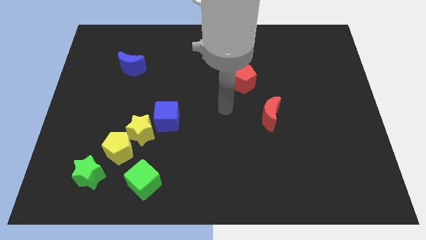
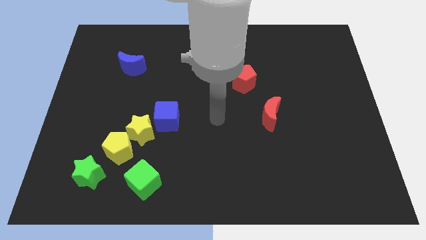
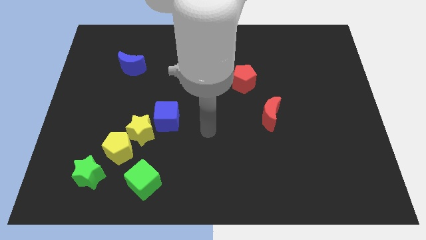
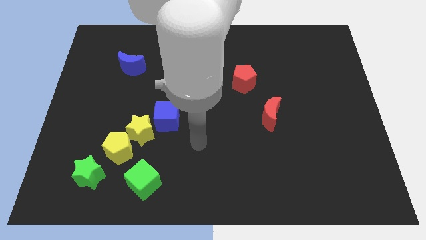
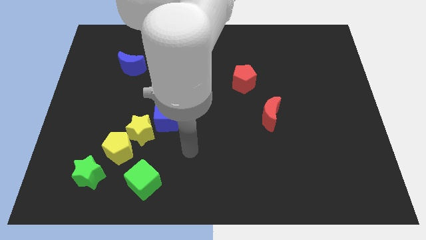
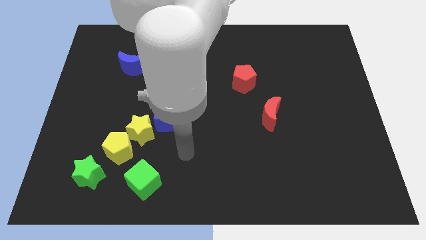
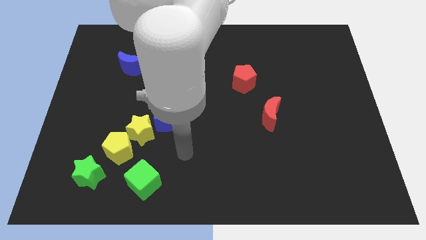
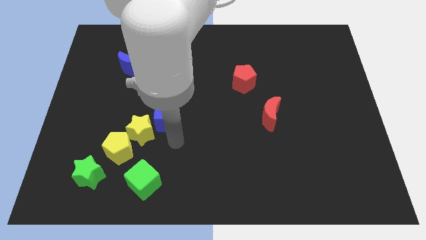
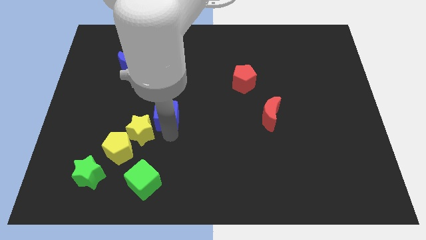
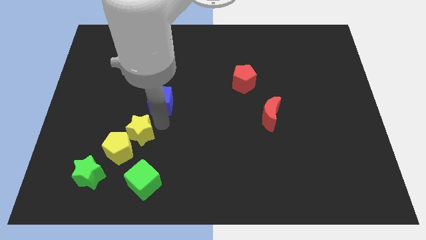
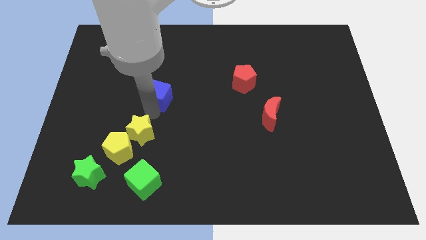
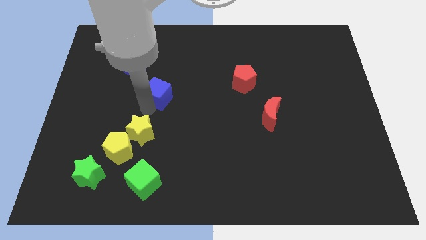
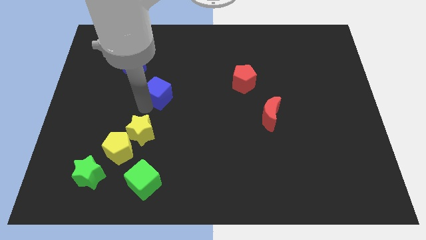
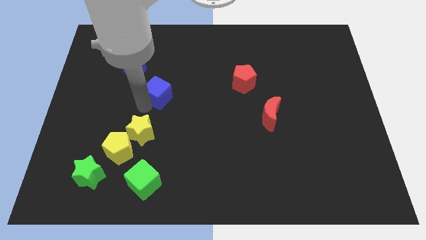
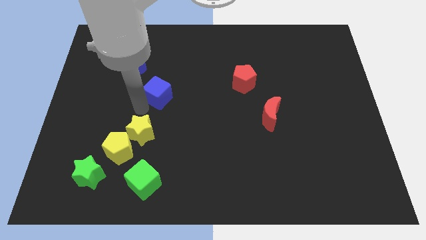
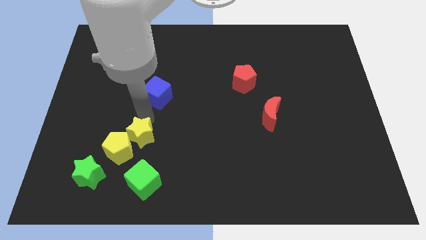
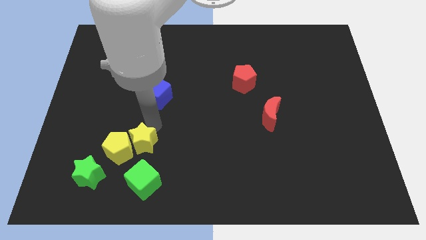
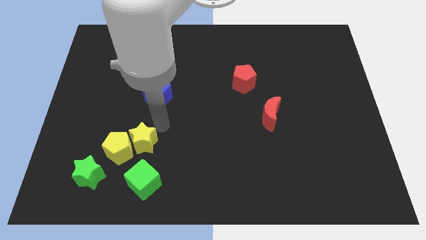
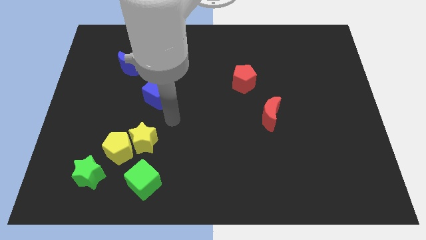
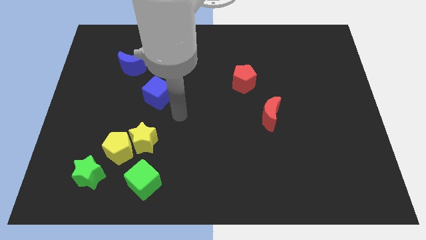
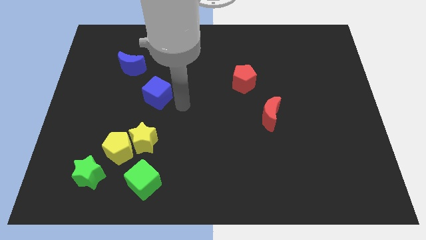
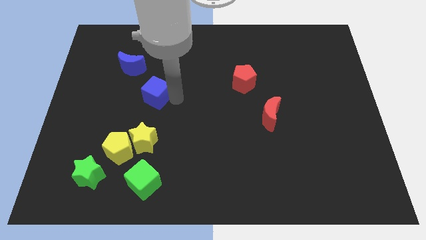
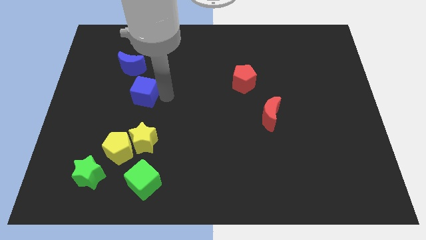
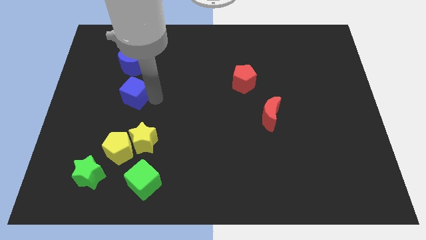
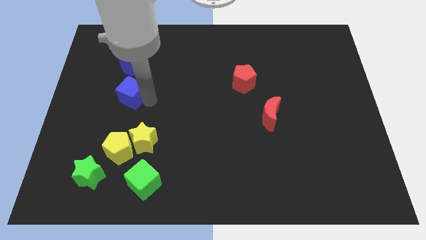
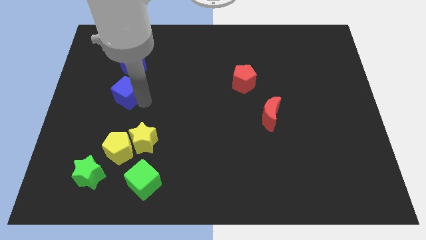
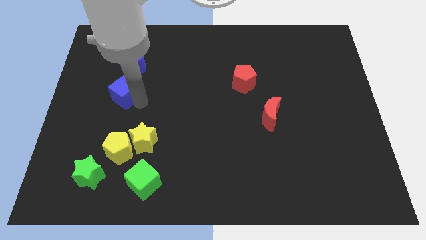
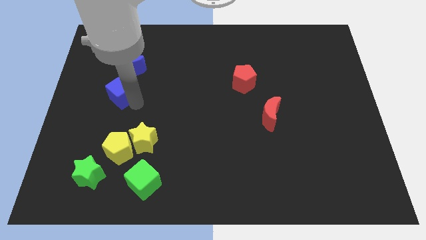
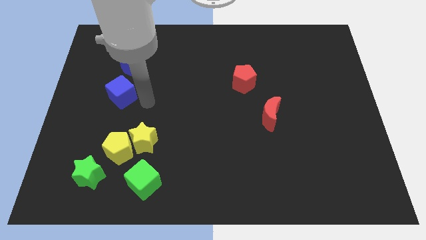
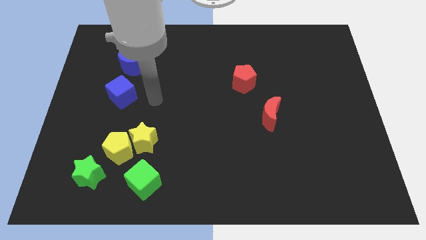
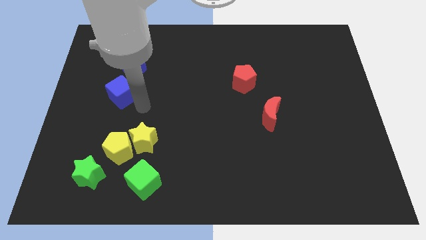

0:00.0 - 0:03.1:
place blue cube below blue moon

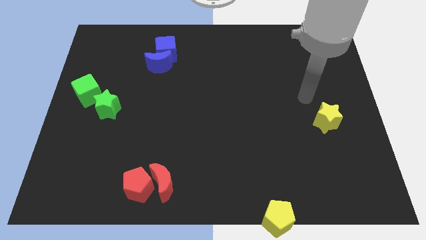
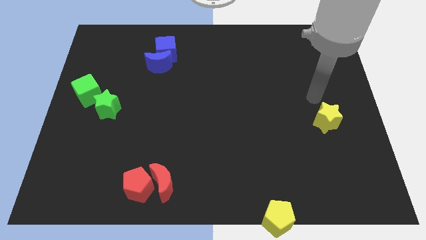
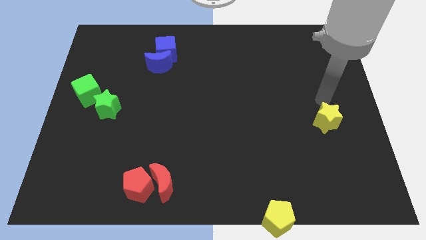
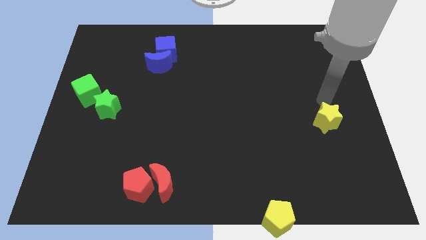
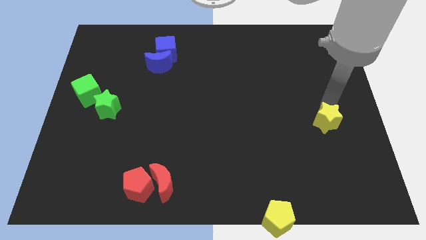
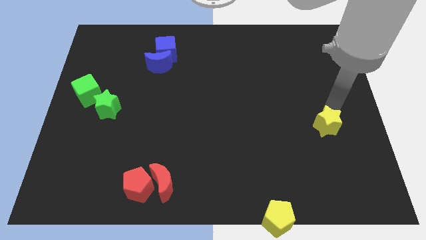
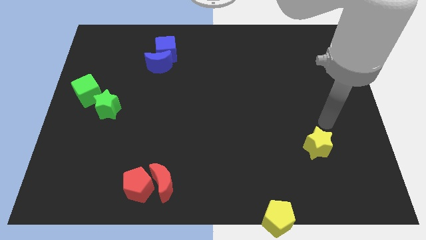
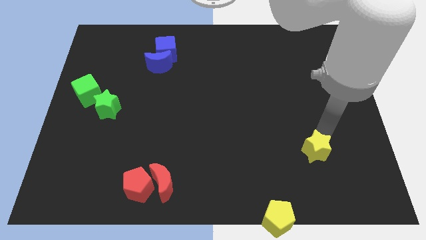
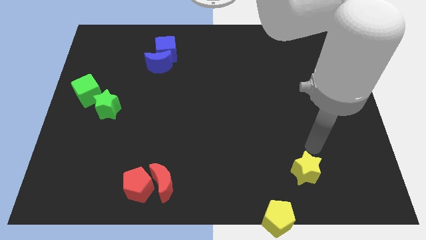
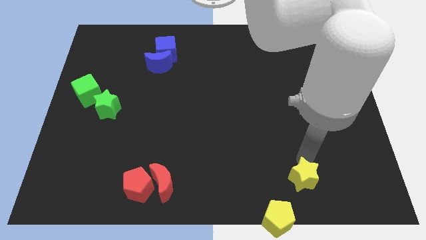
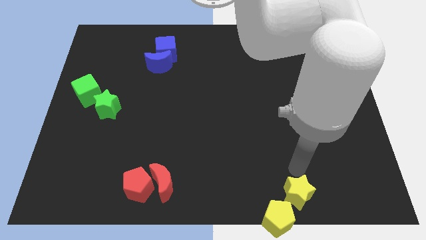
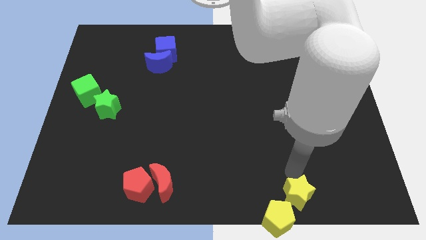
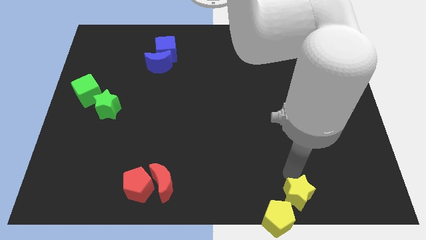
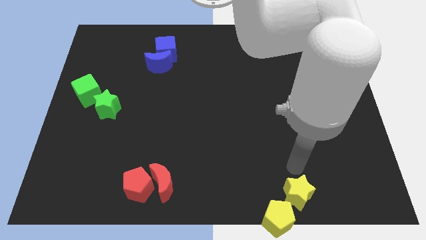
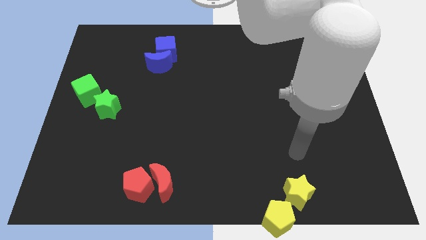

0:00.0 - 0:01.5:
push the yellow star to the top right of the yellow pentagon

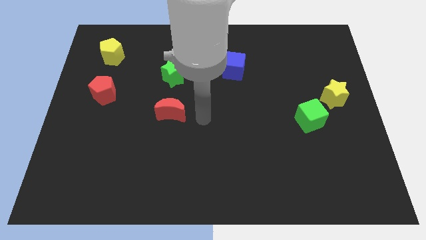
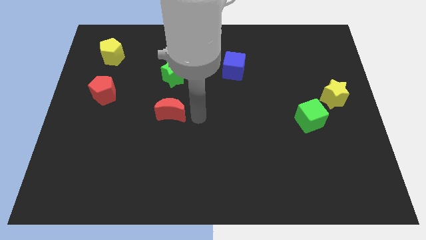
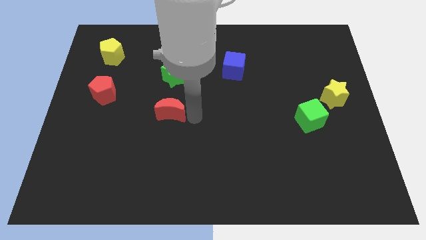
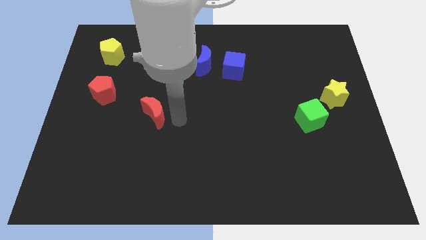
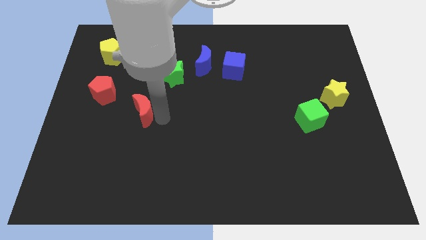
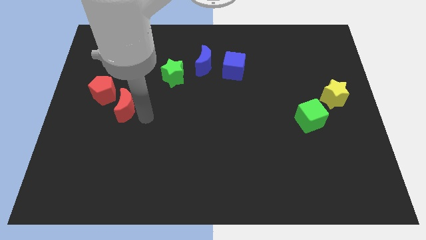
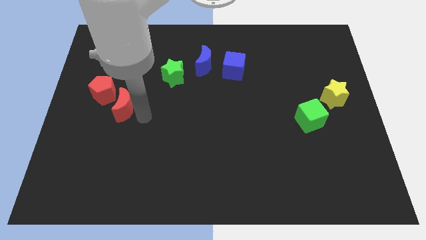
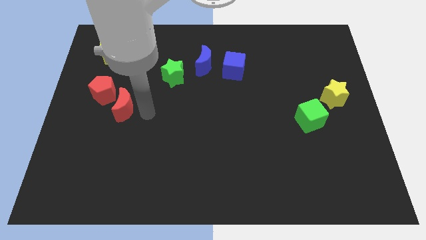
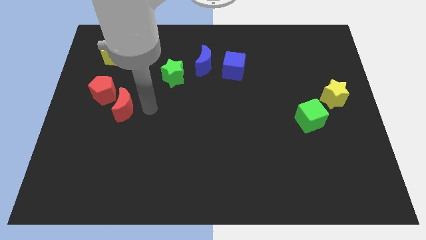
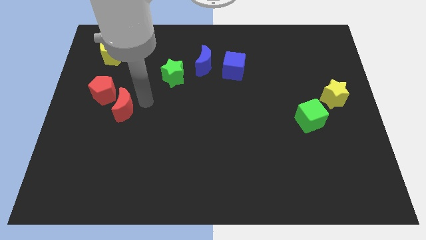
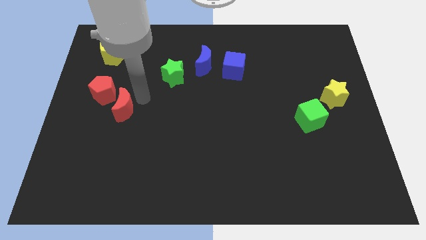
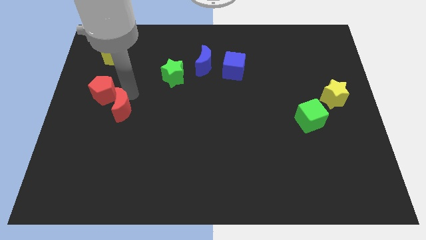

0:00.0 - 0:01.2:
place the red moon at the bottom right side of red pentagon

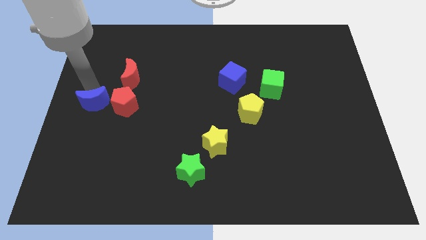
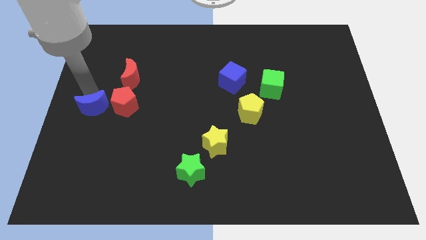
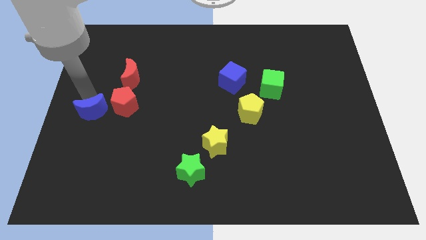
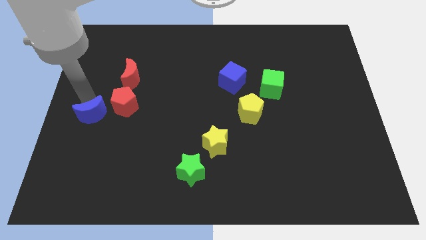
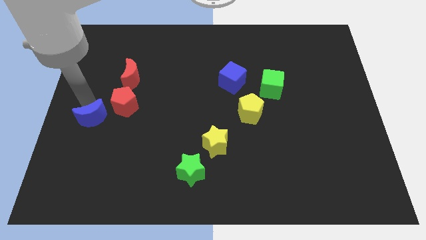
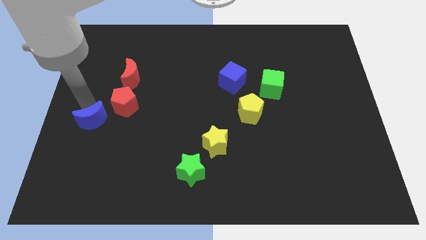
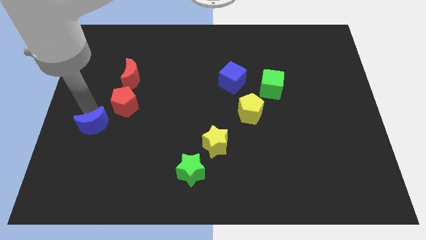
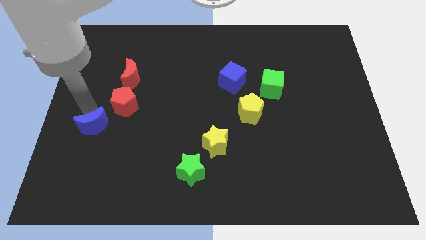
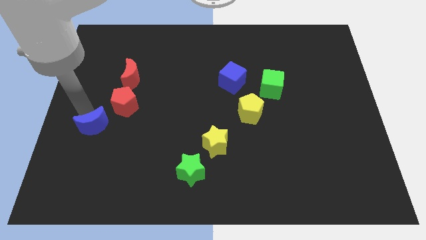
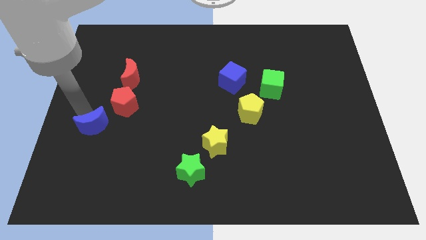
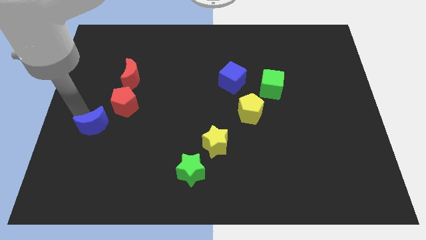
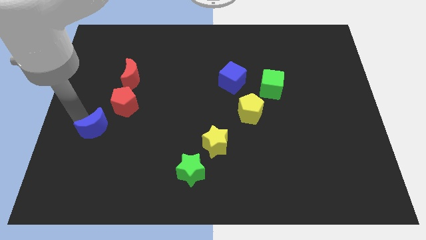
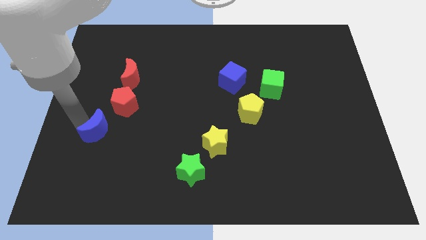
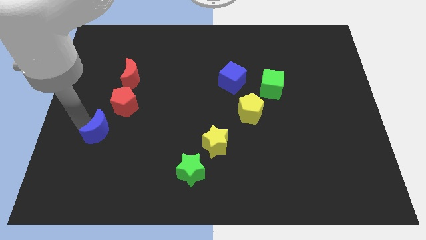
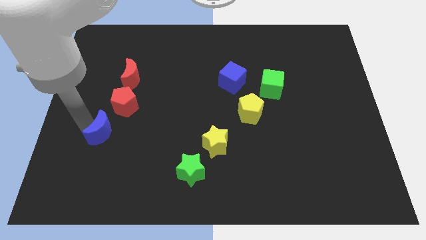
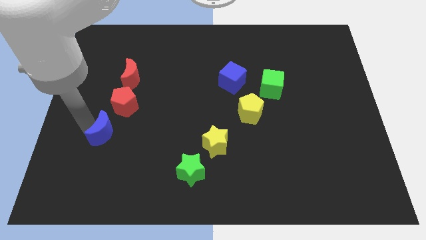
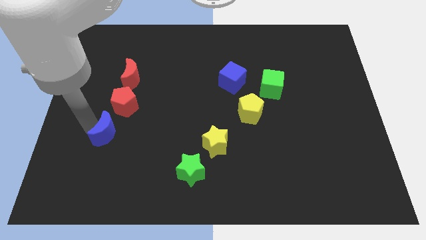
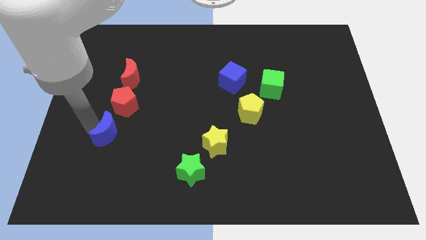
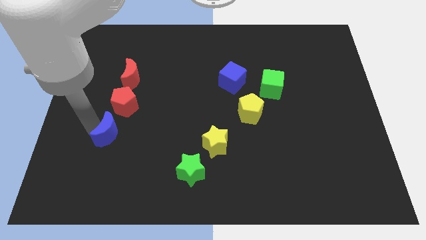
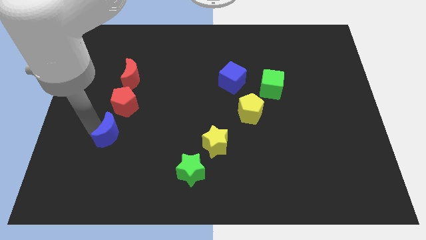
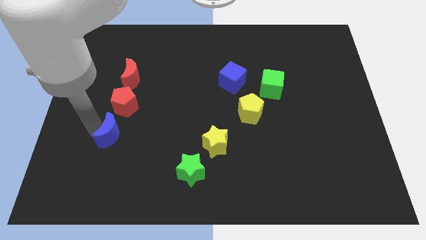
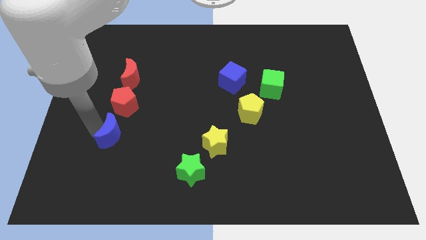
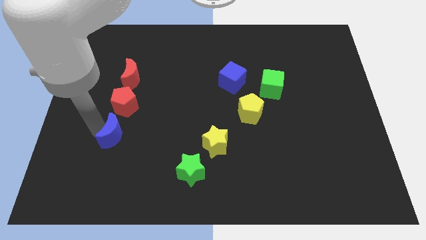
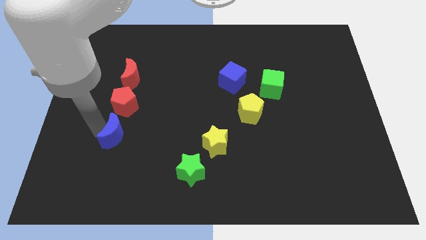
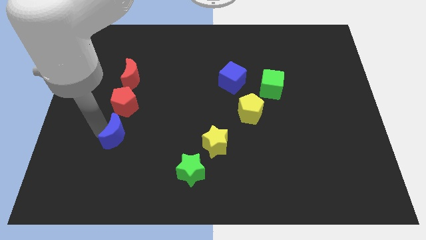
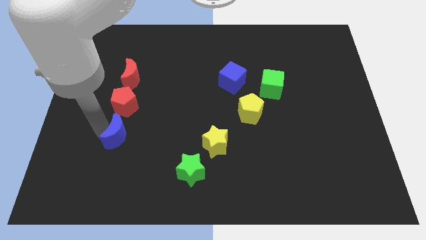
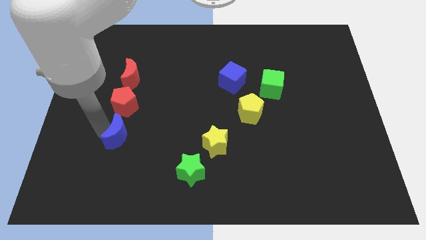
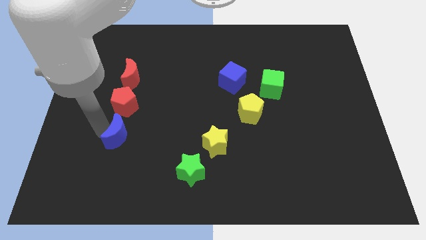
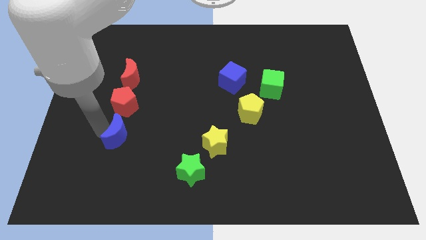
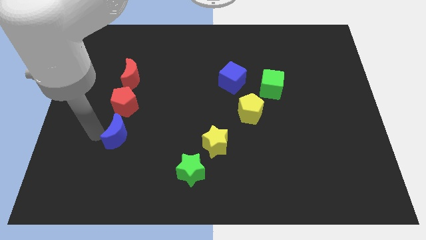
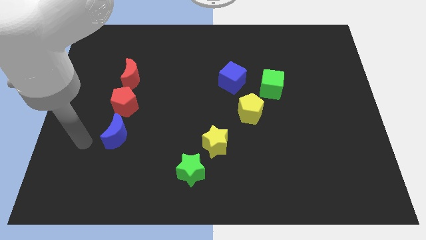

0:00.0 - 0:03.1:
move blue moon below red pentagon
